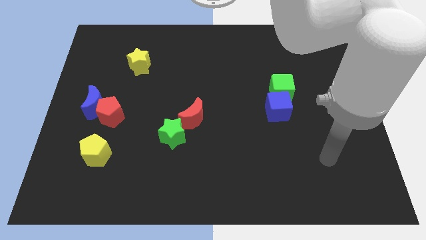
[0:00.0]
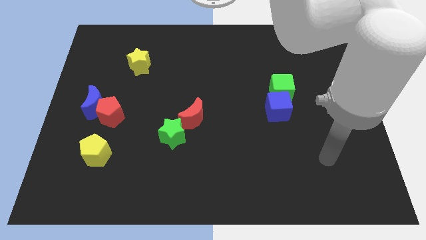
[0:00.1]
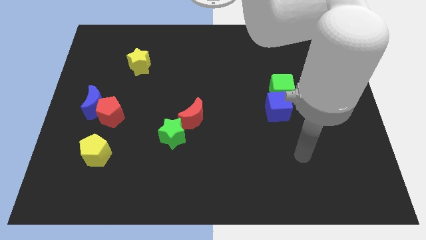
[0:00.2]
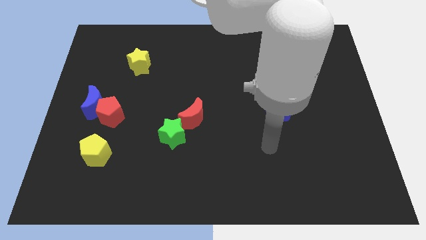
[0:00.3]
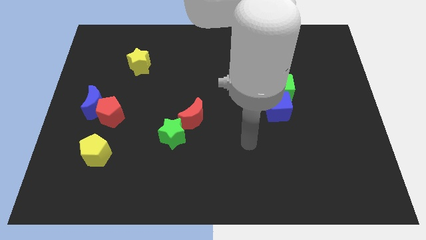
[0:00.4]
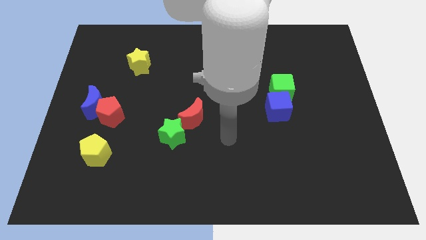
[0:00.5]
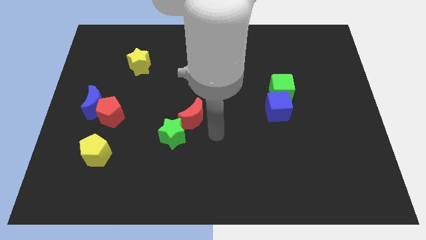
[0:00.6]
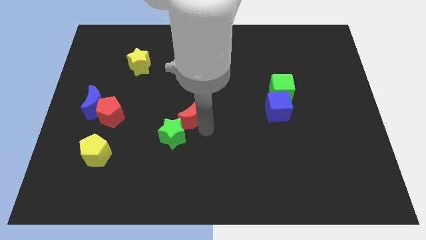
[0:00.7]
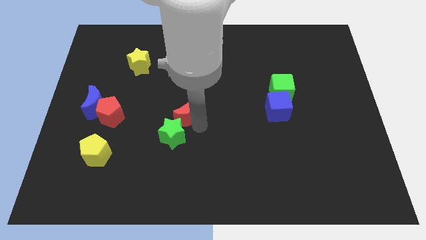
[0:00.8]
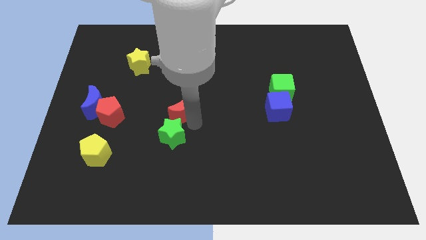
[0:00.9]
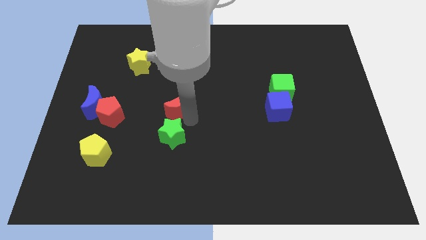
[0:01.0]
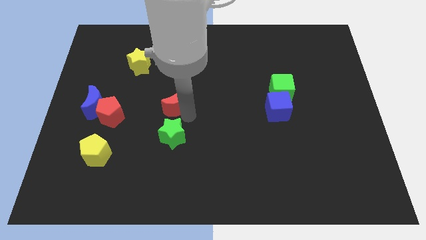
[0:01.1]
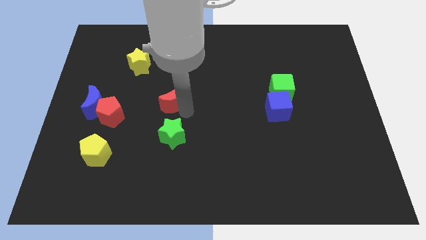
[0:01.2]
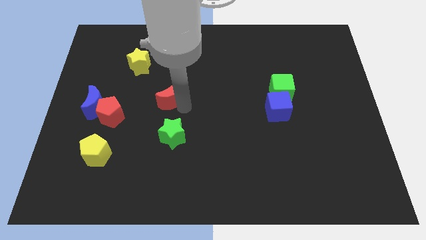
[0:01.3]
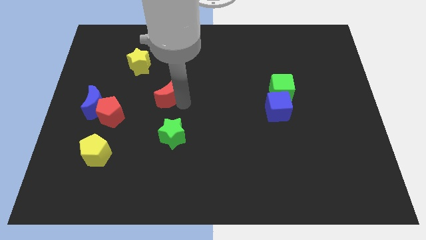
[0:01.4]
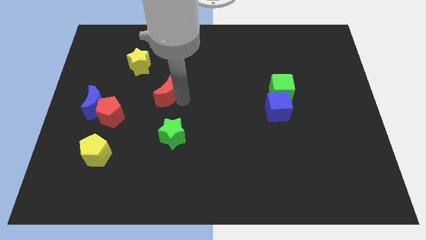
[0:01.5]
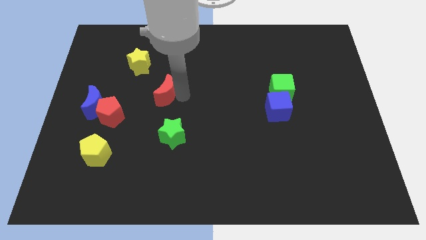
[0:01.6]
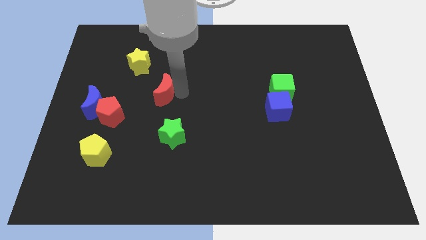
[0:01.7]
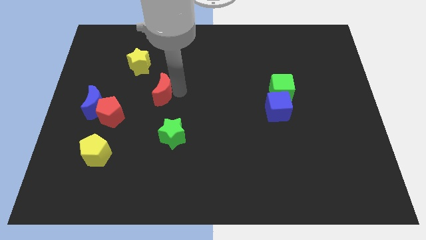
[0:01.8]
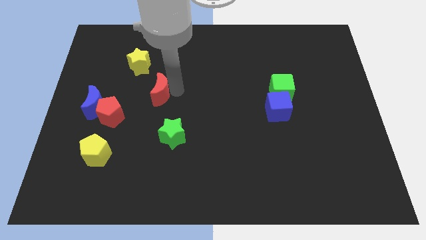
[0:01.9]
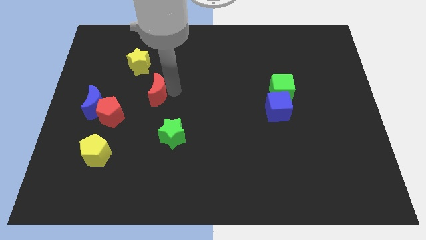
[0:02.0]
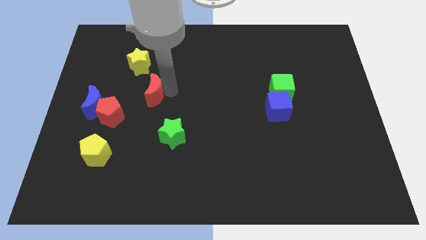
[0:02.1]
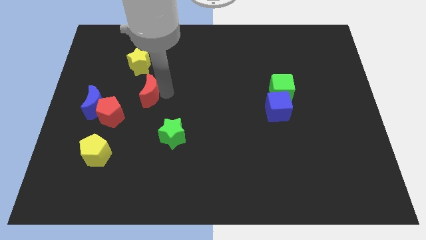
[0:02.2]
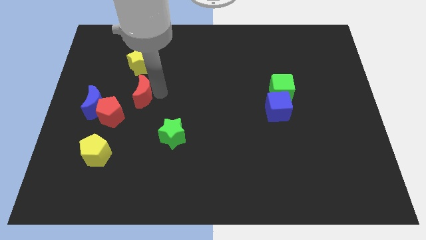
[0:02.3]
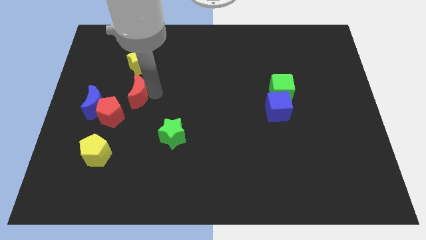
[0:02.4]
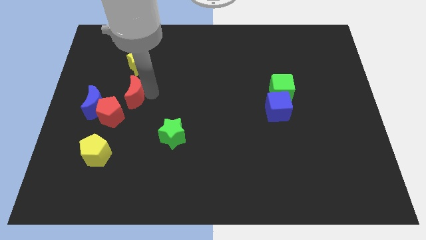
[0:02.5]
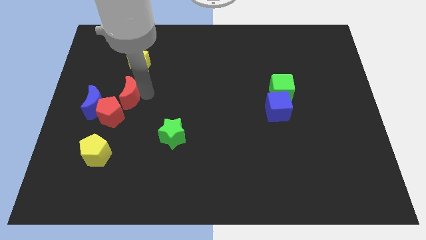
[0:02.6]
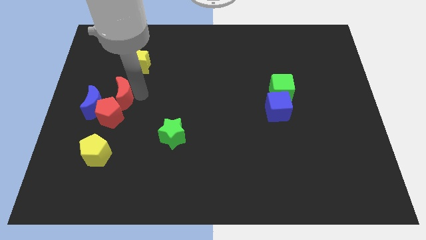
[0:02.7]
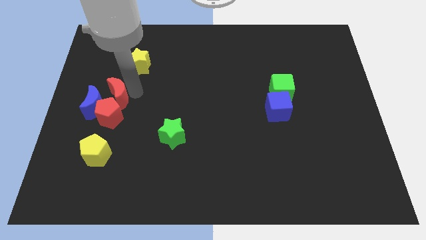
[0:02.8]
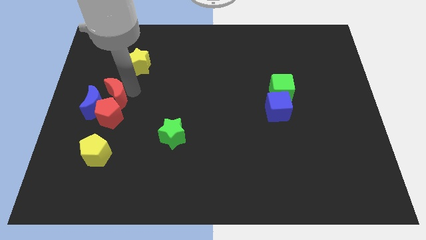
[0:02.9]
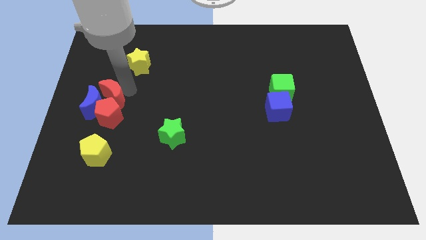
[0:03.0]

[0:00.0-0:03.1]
push the red moon close to the blue moon

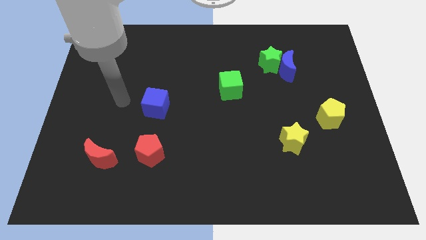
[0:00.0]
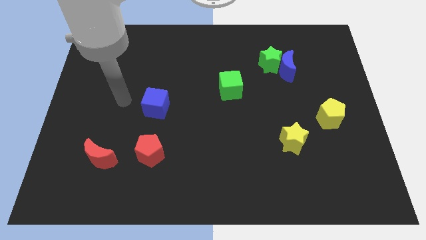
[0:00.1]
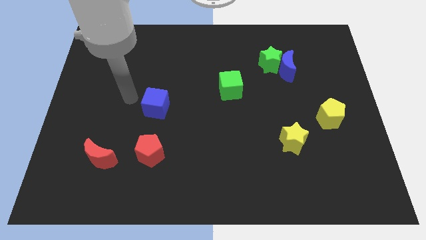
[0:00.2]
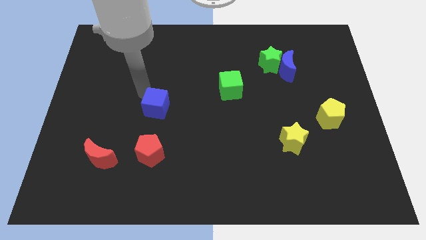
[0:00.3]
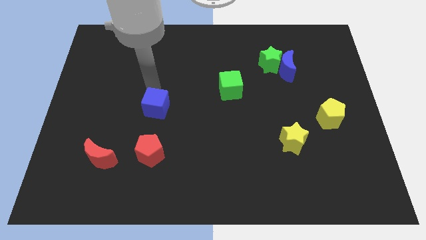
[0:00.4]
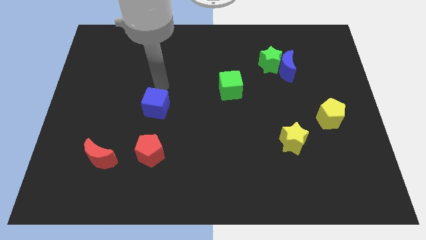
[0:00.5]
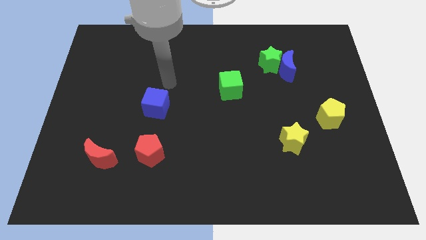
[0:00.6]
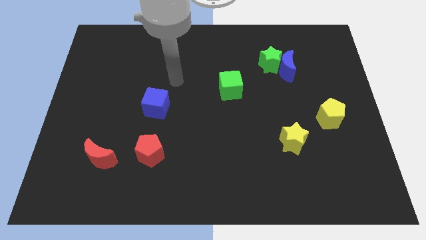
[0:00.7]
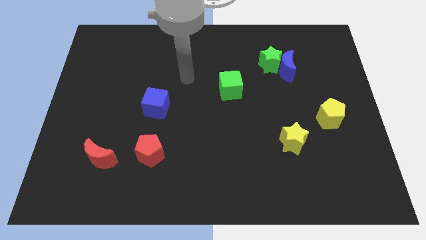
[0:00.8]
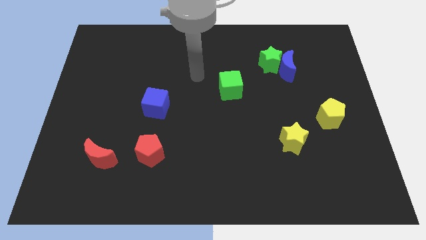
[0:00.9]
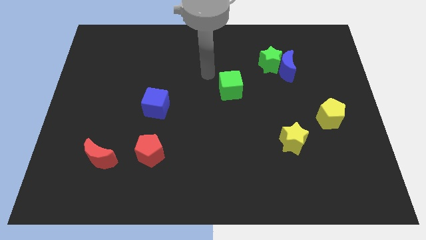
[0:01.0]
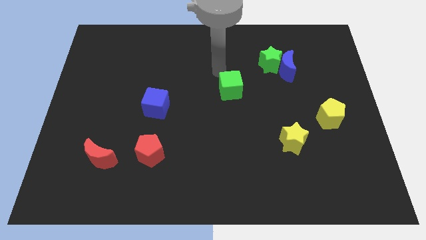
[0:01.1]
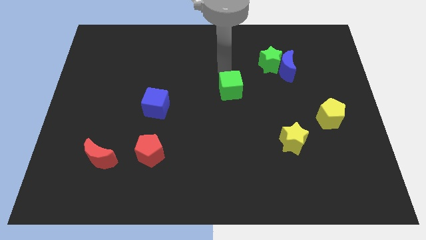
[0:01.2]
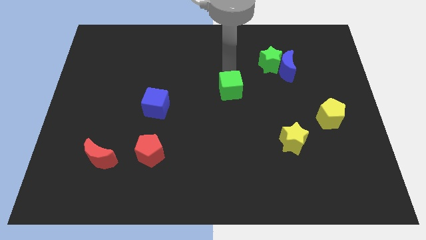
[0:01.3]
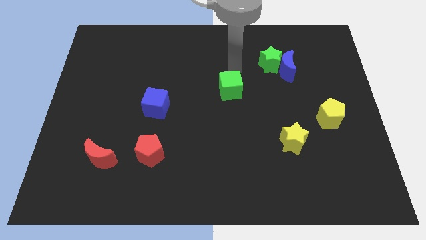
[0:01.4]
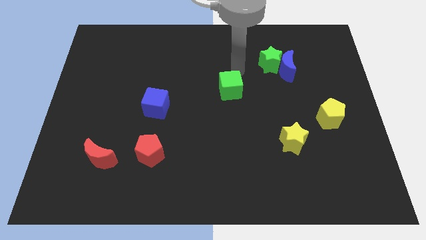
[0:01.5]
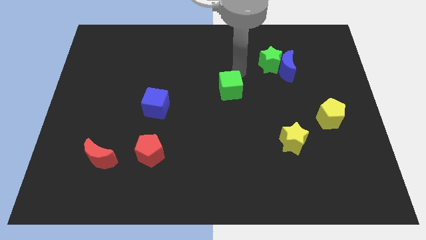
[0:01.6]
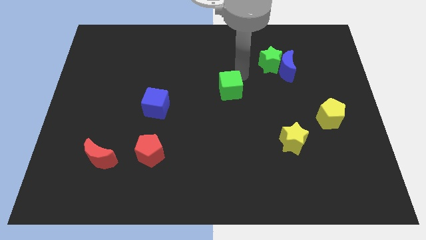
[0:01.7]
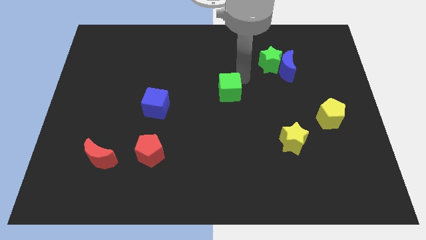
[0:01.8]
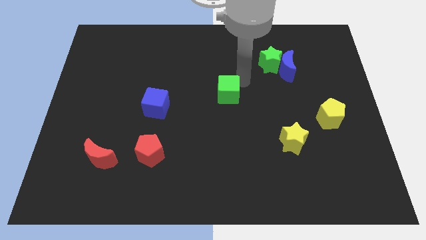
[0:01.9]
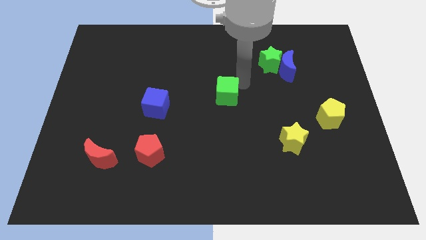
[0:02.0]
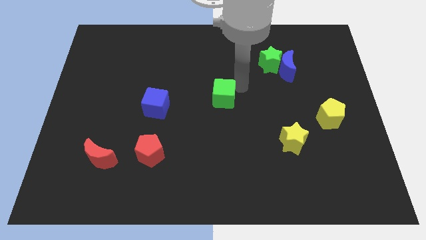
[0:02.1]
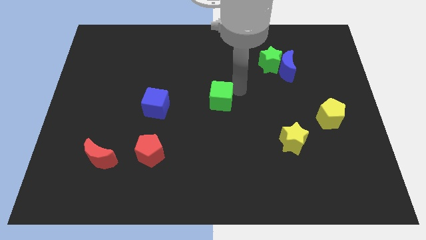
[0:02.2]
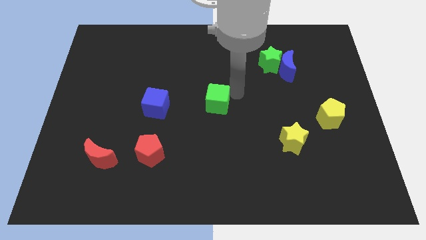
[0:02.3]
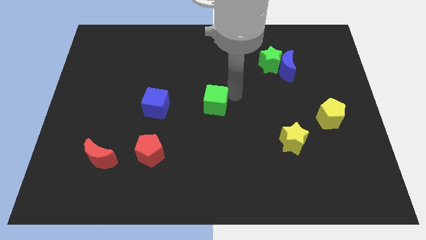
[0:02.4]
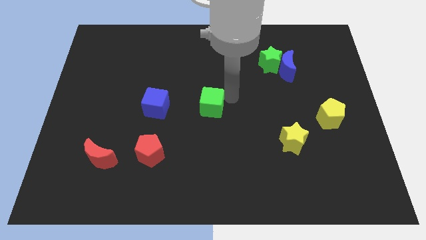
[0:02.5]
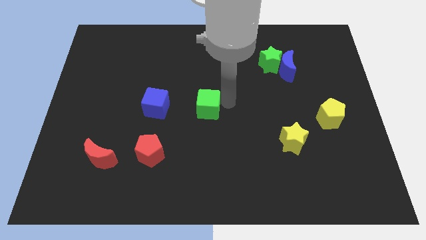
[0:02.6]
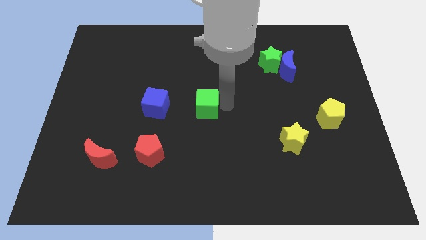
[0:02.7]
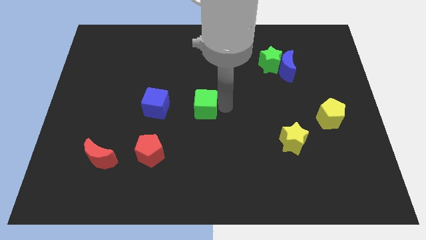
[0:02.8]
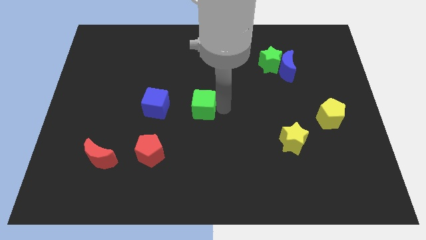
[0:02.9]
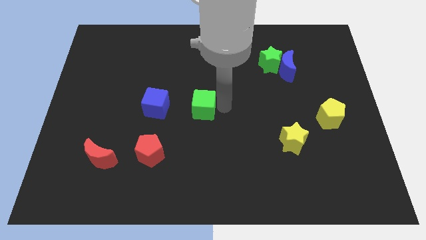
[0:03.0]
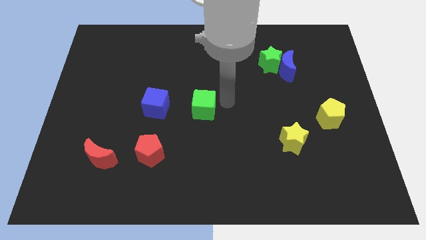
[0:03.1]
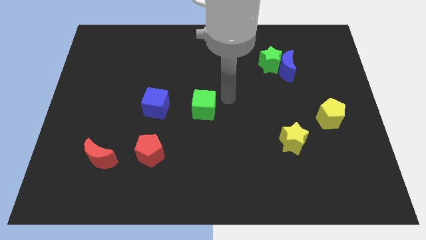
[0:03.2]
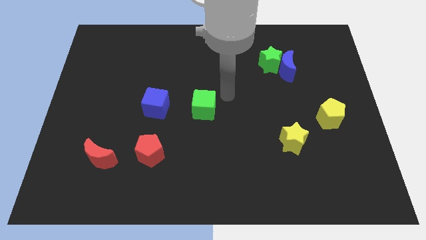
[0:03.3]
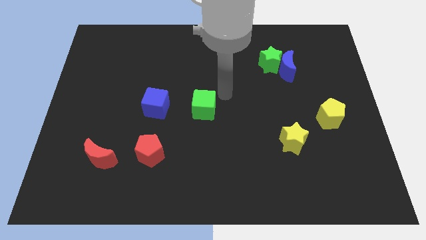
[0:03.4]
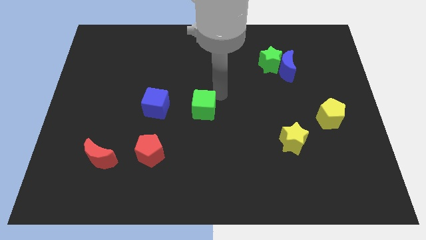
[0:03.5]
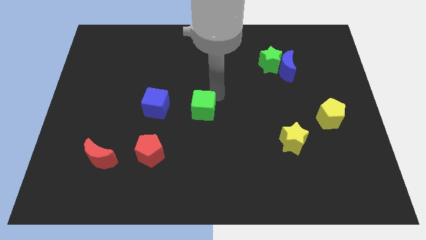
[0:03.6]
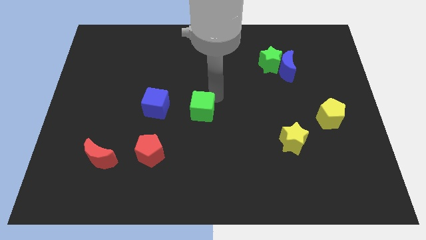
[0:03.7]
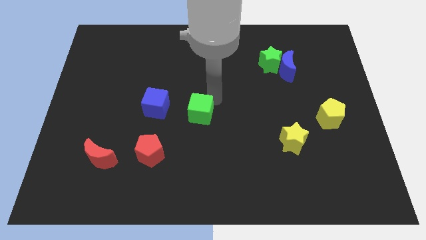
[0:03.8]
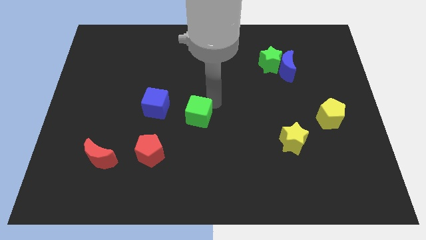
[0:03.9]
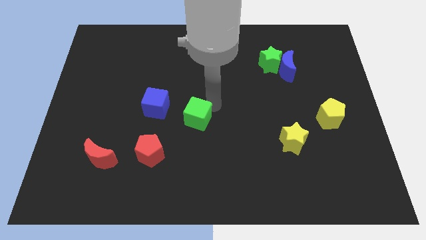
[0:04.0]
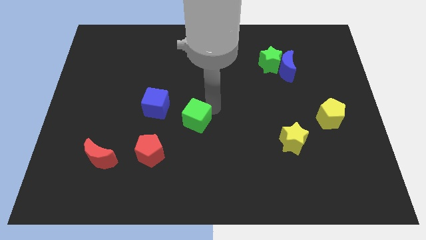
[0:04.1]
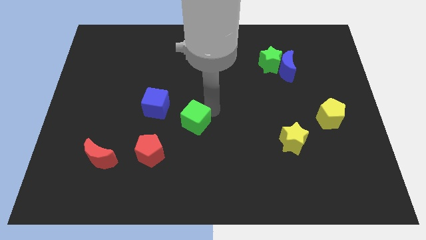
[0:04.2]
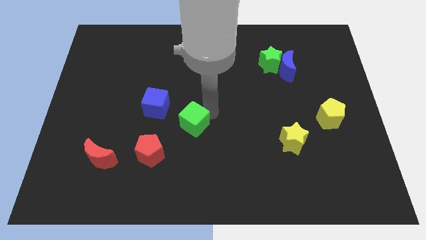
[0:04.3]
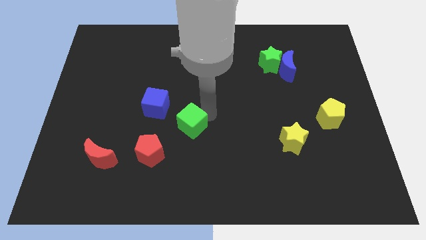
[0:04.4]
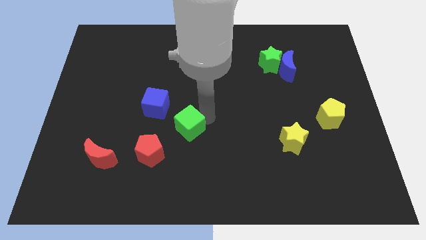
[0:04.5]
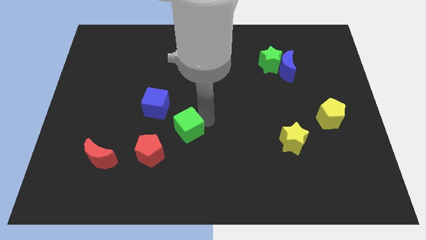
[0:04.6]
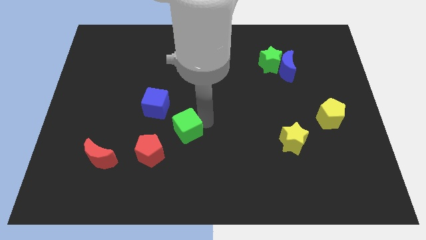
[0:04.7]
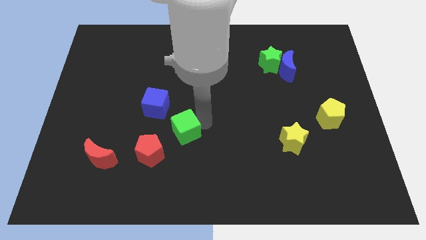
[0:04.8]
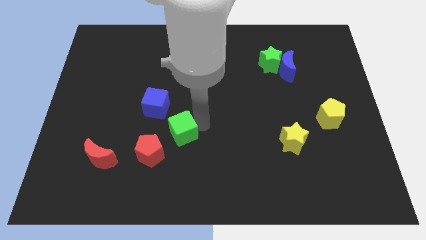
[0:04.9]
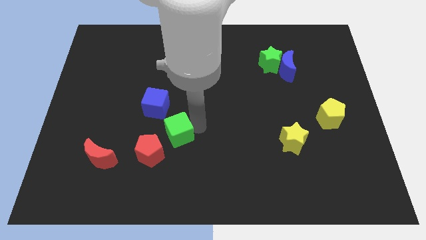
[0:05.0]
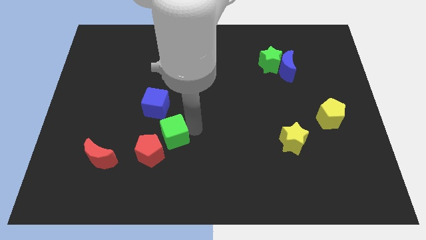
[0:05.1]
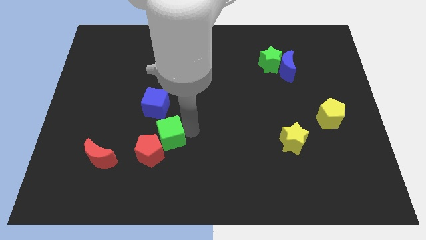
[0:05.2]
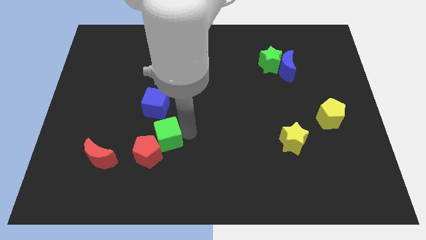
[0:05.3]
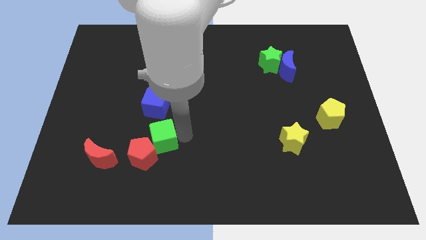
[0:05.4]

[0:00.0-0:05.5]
put the green cube close to the red pentagon

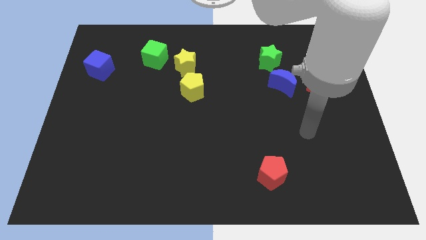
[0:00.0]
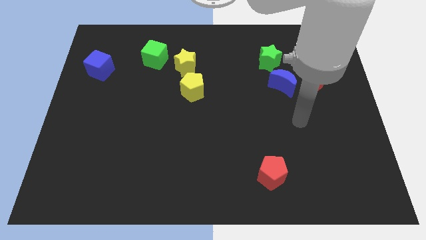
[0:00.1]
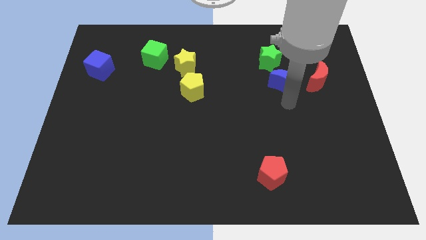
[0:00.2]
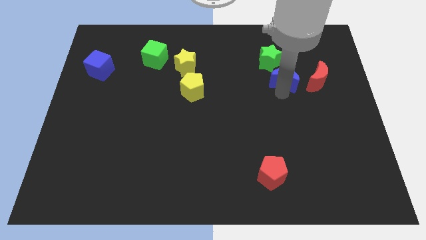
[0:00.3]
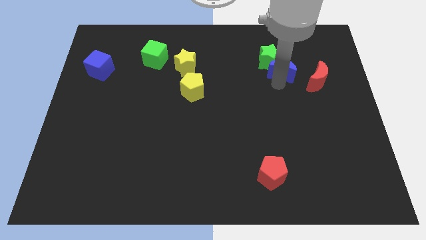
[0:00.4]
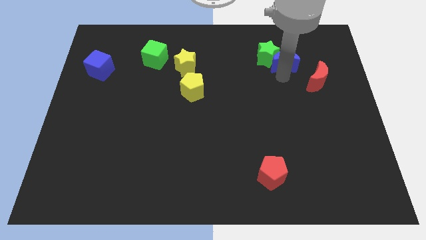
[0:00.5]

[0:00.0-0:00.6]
slide the blue moon towards the green star
